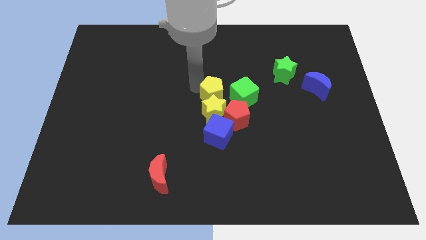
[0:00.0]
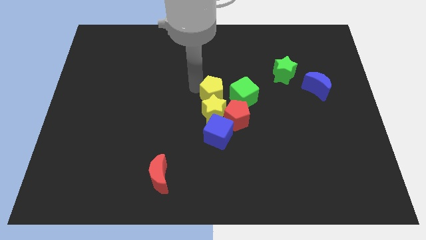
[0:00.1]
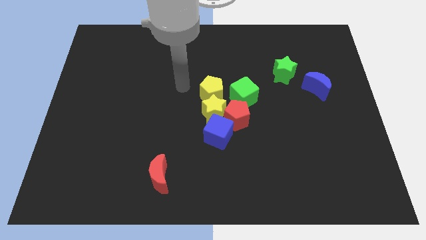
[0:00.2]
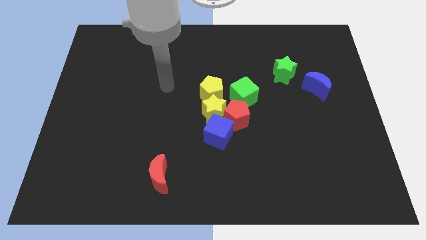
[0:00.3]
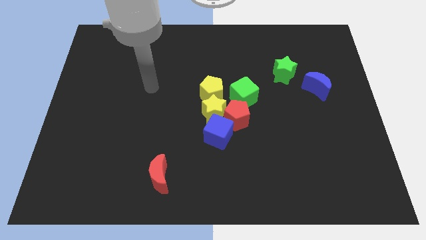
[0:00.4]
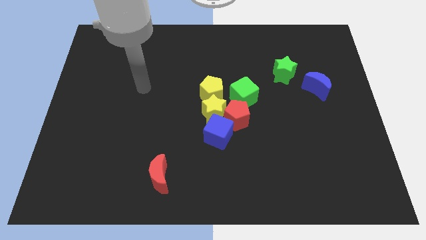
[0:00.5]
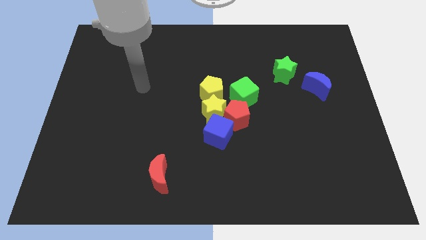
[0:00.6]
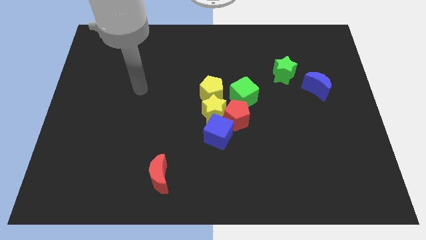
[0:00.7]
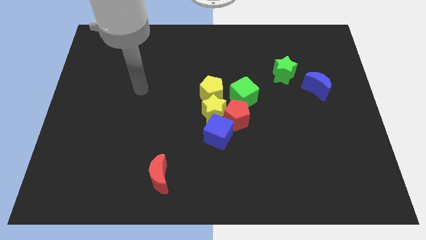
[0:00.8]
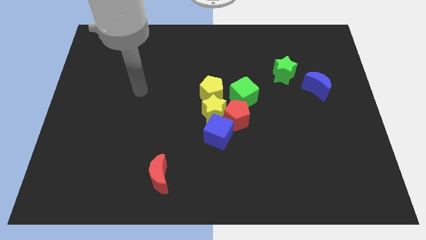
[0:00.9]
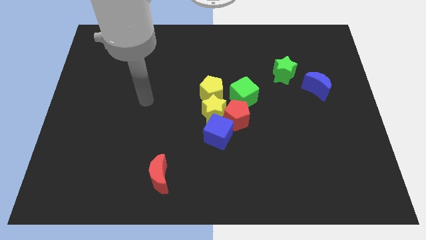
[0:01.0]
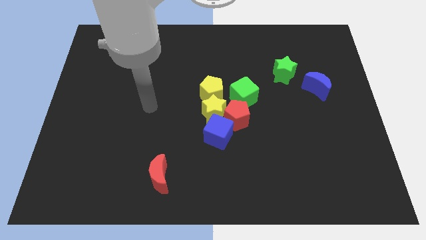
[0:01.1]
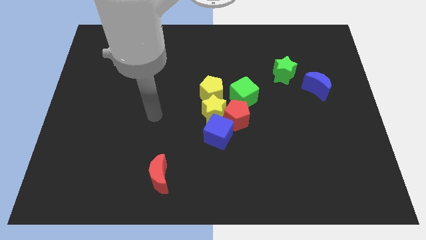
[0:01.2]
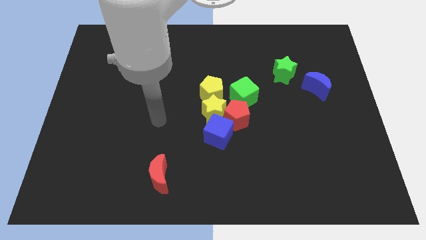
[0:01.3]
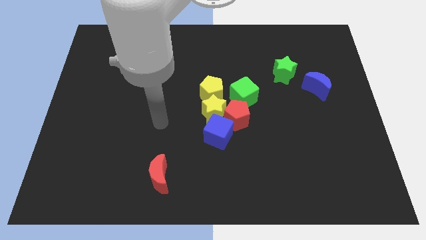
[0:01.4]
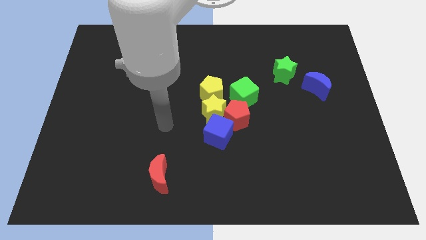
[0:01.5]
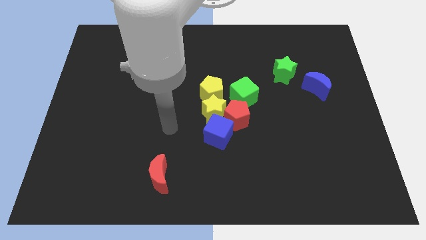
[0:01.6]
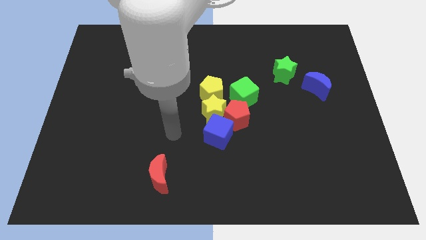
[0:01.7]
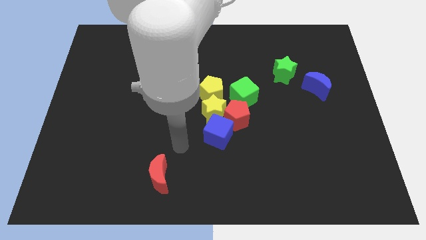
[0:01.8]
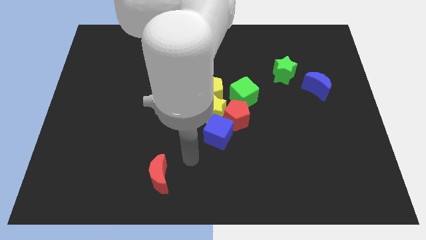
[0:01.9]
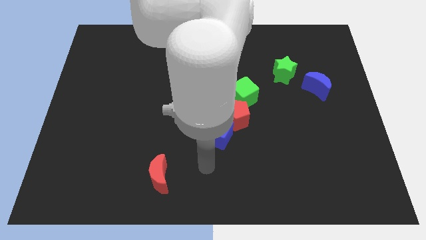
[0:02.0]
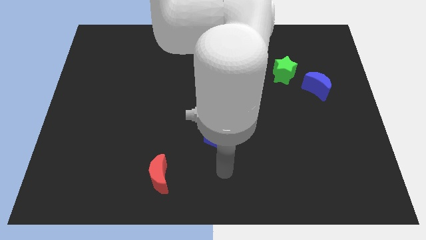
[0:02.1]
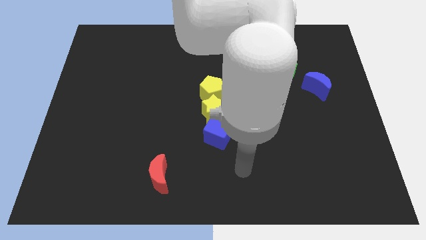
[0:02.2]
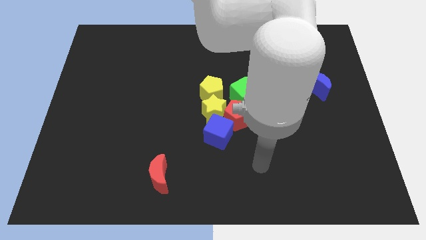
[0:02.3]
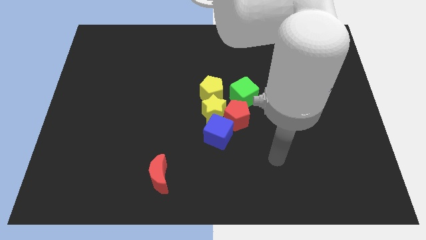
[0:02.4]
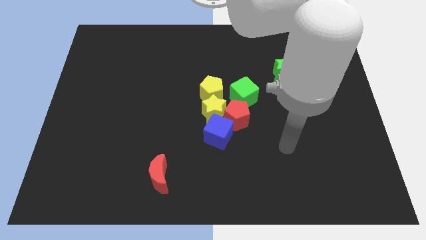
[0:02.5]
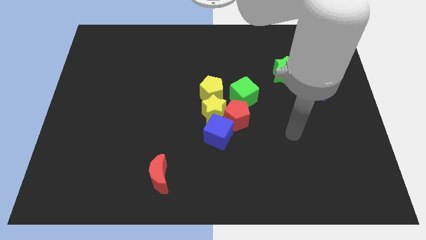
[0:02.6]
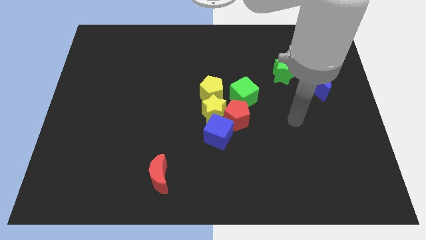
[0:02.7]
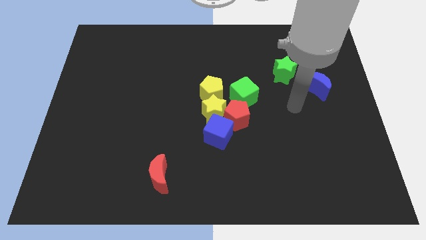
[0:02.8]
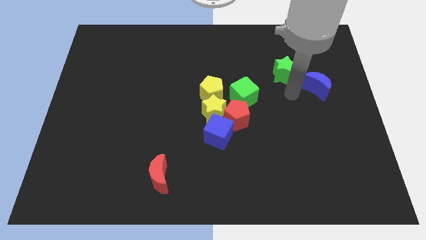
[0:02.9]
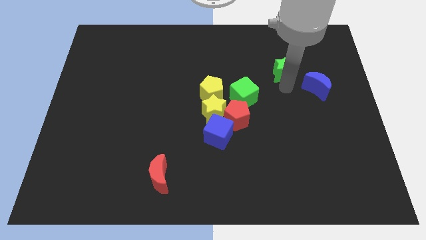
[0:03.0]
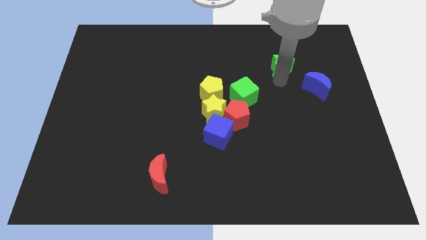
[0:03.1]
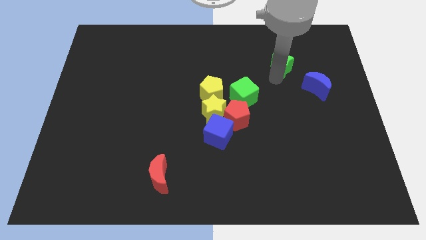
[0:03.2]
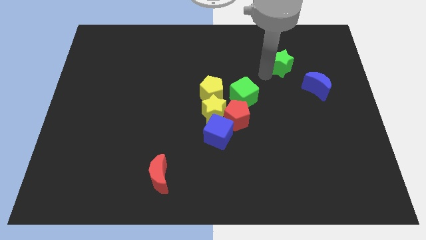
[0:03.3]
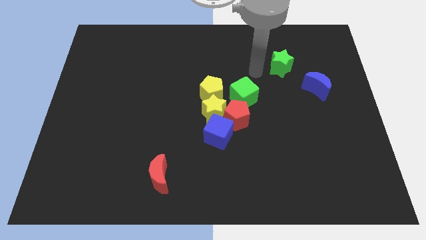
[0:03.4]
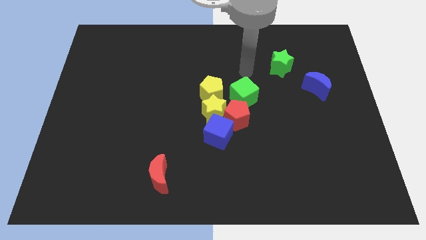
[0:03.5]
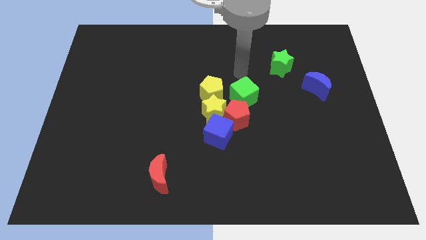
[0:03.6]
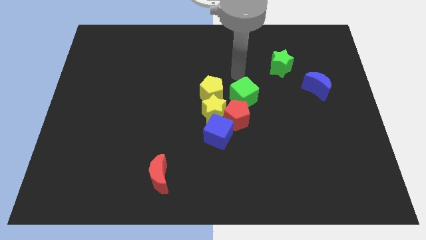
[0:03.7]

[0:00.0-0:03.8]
point the arm at the top of the green cube

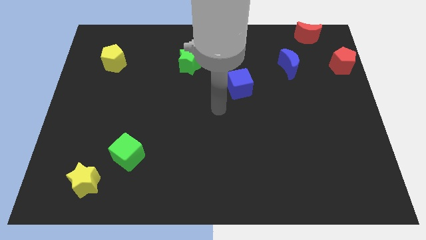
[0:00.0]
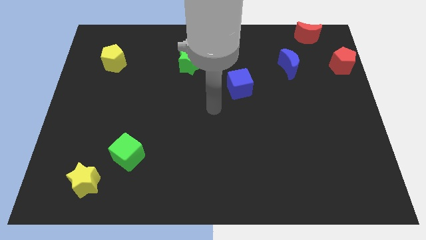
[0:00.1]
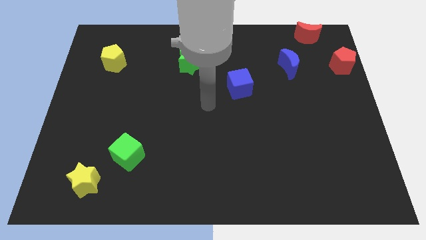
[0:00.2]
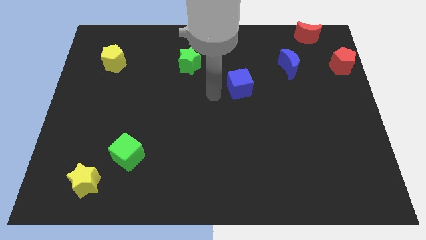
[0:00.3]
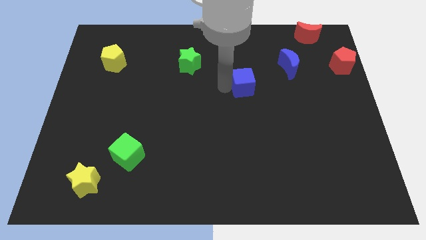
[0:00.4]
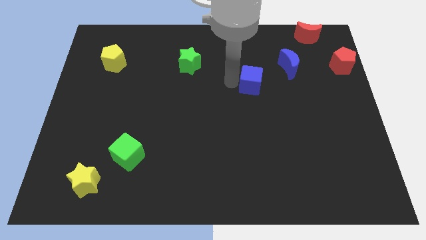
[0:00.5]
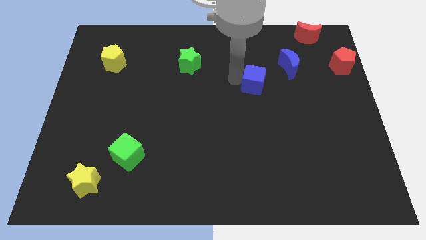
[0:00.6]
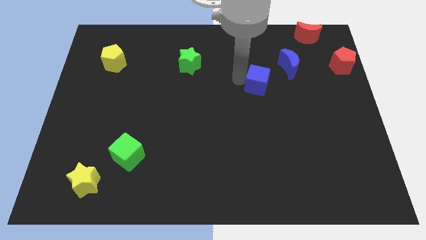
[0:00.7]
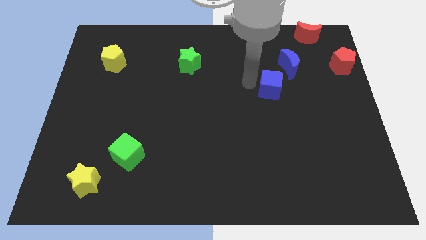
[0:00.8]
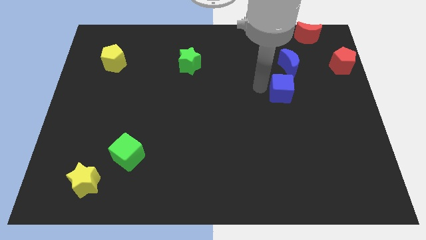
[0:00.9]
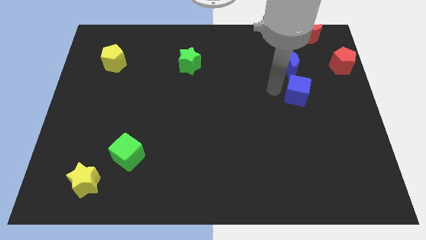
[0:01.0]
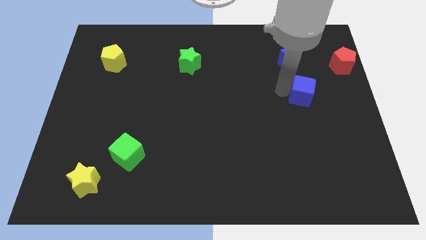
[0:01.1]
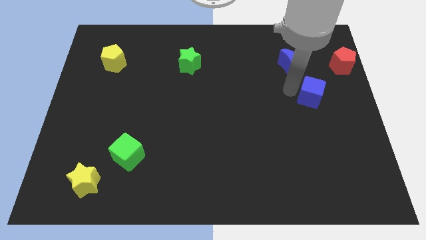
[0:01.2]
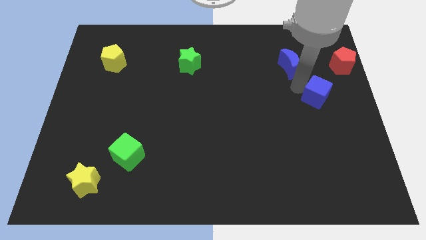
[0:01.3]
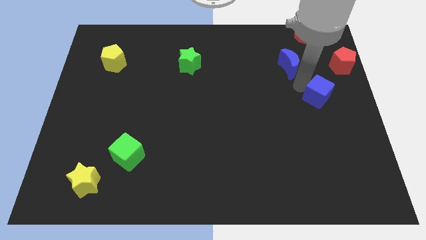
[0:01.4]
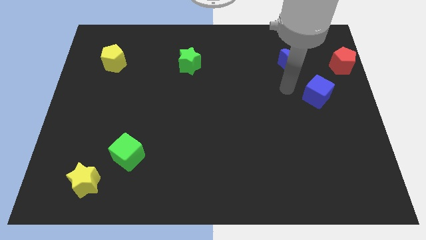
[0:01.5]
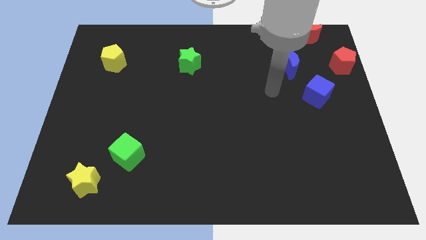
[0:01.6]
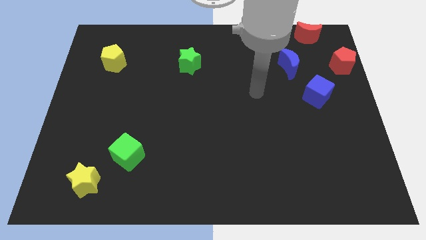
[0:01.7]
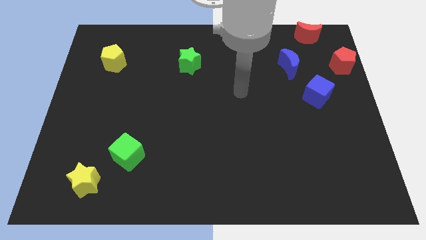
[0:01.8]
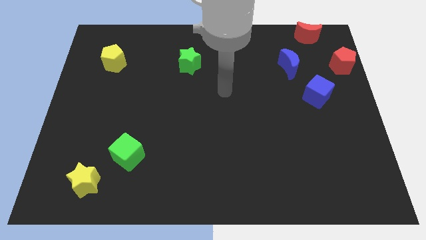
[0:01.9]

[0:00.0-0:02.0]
push the blue cube to the vertical bottom side of the red moon

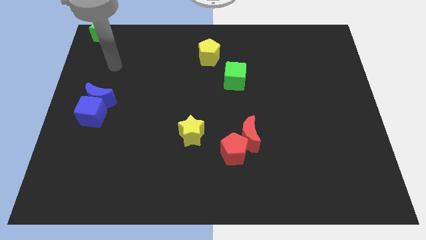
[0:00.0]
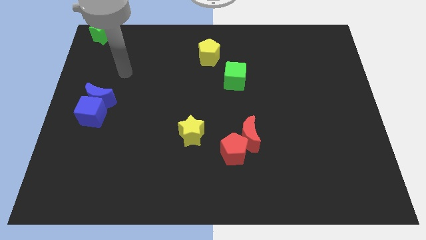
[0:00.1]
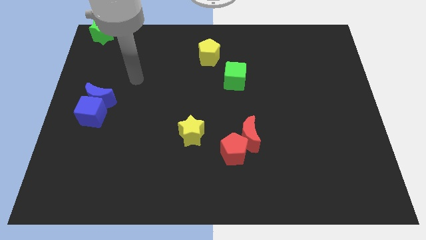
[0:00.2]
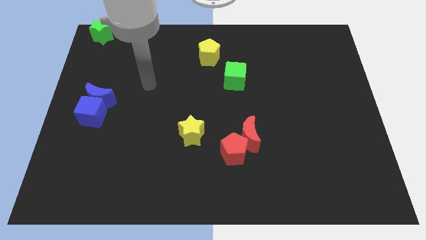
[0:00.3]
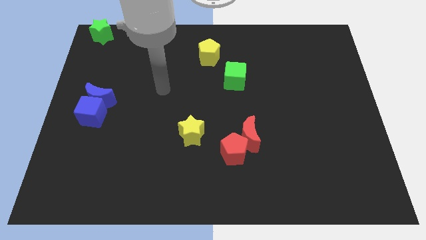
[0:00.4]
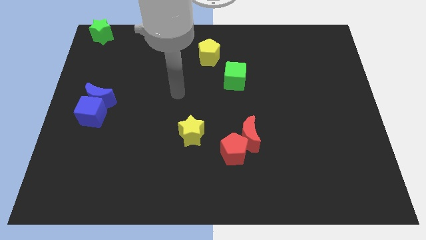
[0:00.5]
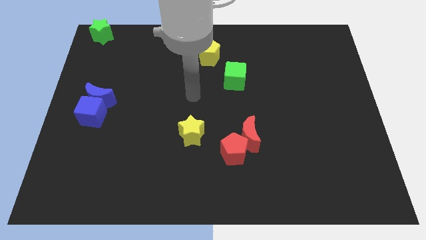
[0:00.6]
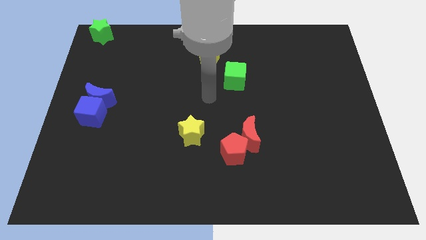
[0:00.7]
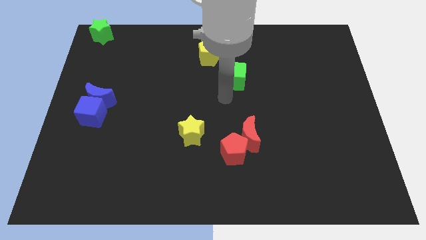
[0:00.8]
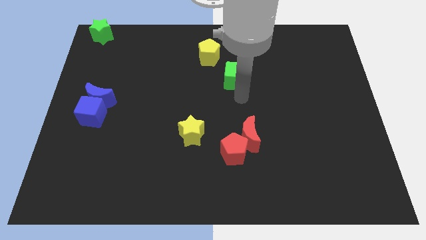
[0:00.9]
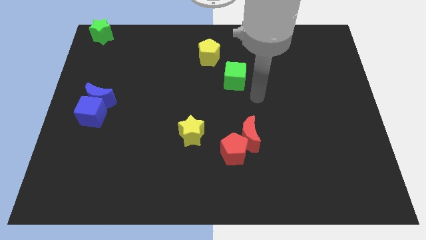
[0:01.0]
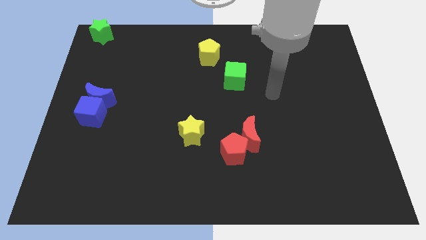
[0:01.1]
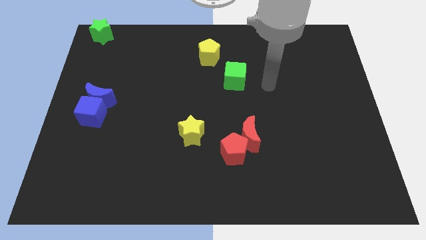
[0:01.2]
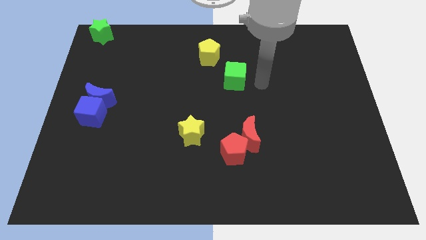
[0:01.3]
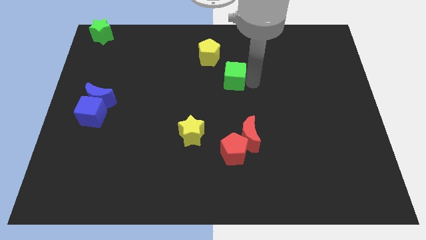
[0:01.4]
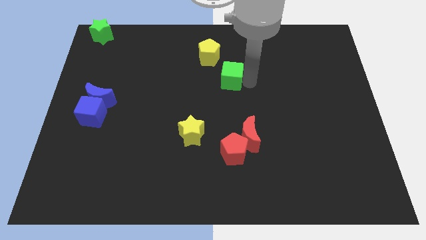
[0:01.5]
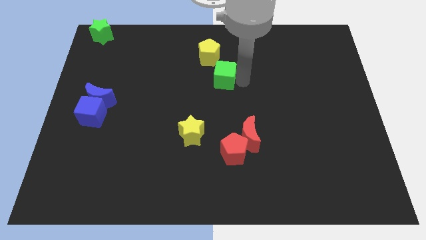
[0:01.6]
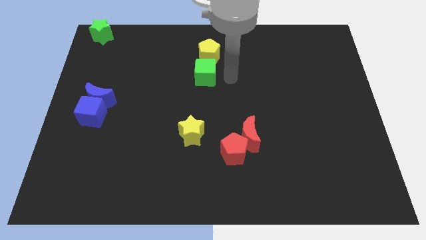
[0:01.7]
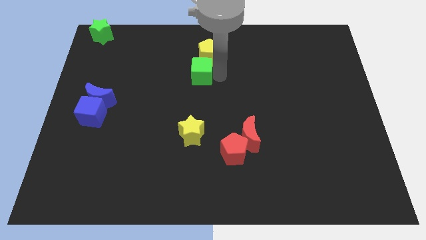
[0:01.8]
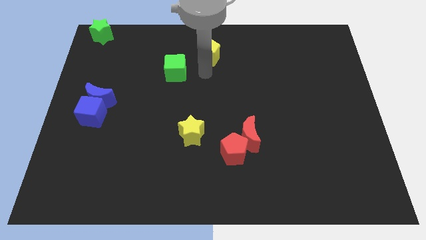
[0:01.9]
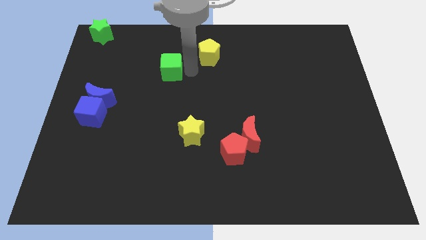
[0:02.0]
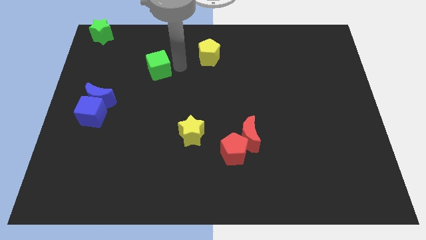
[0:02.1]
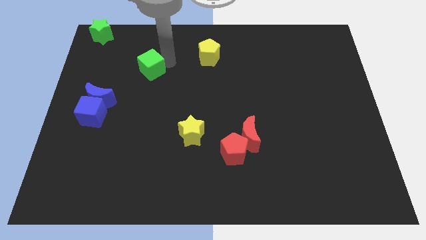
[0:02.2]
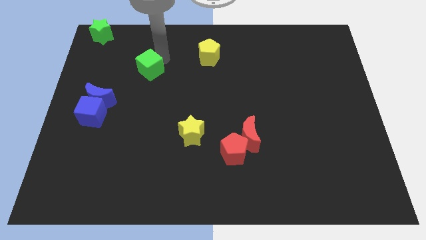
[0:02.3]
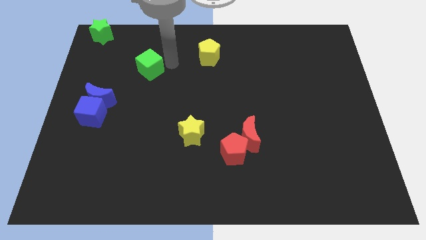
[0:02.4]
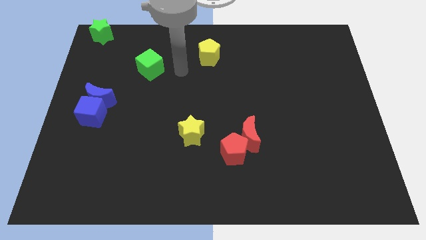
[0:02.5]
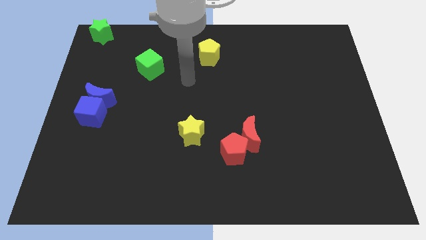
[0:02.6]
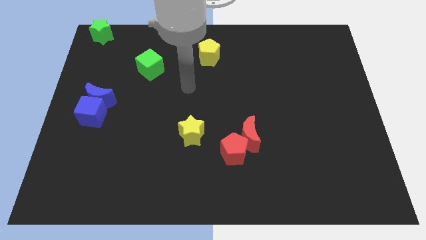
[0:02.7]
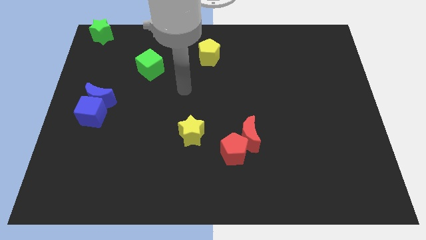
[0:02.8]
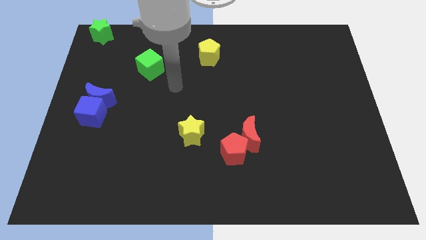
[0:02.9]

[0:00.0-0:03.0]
place the green cube in between the yellow pentagon and blue moon
